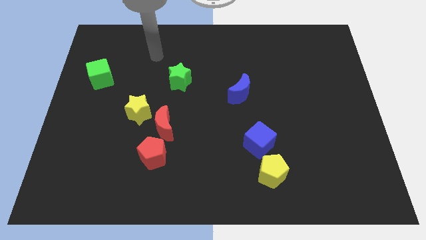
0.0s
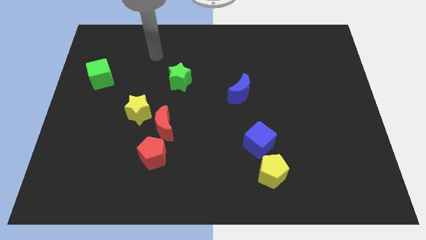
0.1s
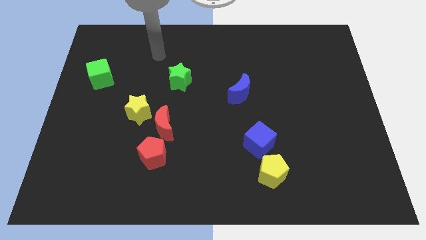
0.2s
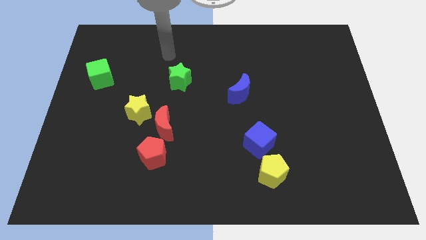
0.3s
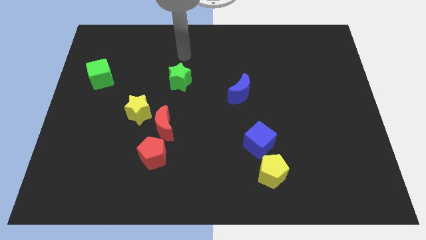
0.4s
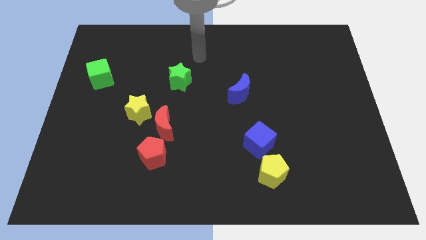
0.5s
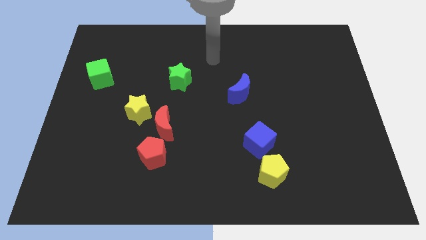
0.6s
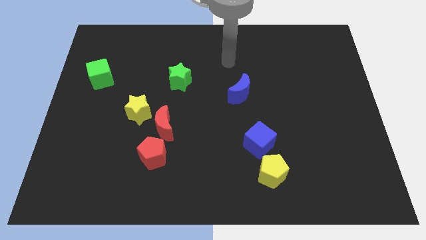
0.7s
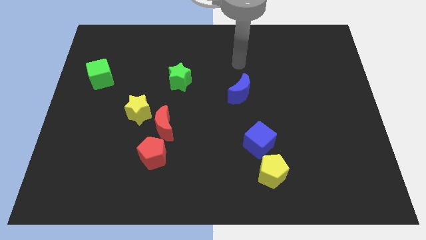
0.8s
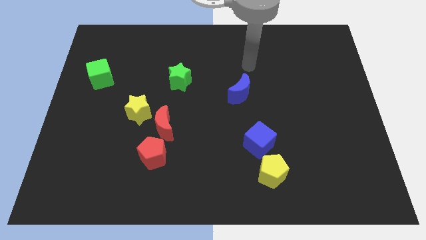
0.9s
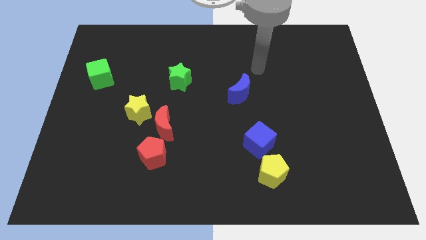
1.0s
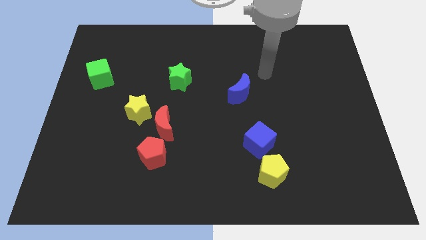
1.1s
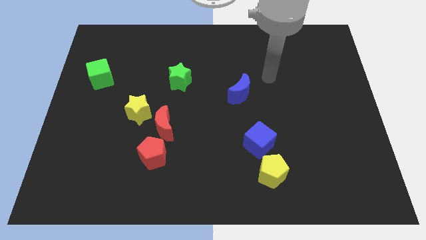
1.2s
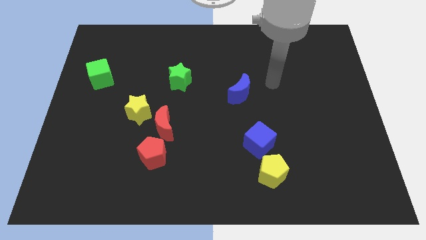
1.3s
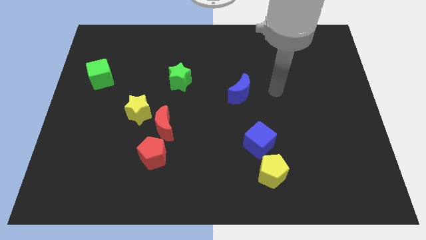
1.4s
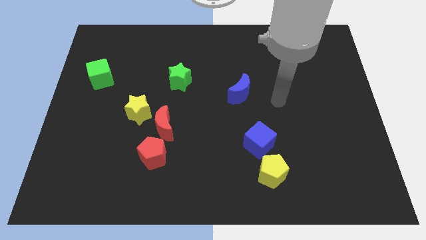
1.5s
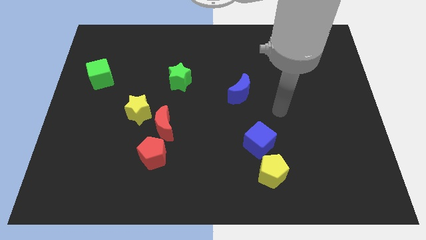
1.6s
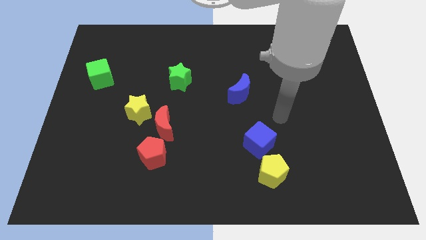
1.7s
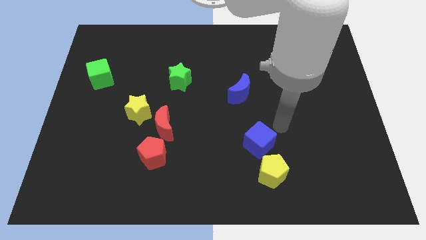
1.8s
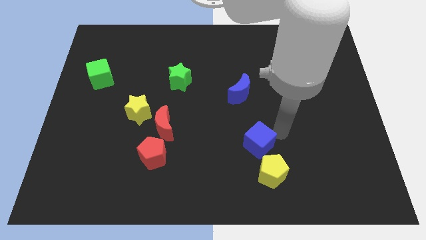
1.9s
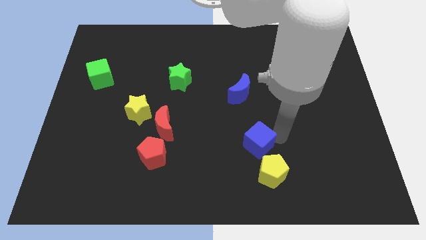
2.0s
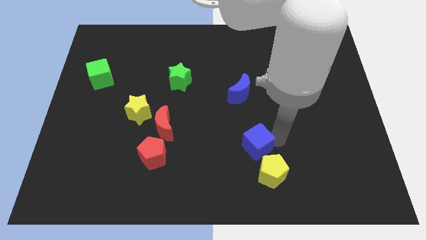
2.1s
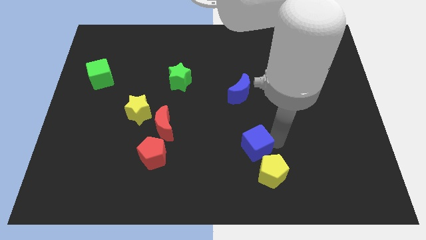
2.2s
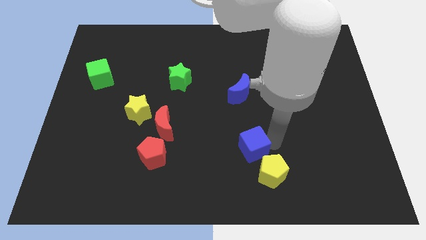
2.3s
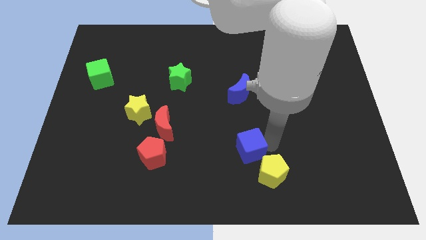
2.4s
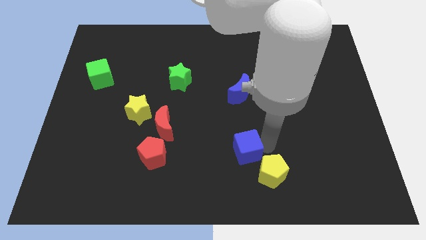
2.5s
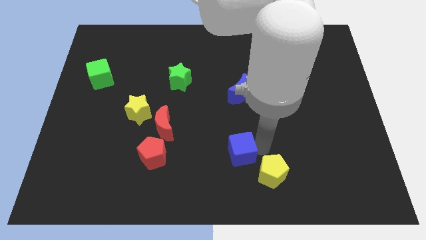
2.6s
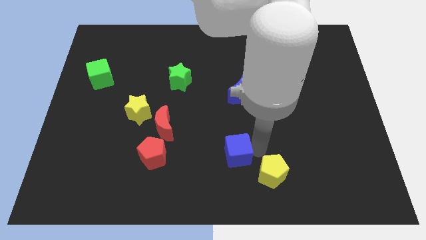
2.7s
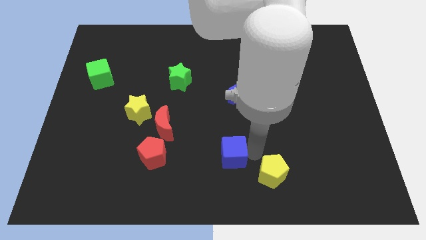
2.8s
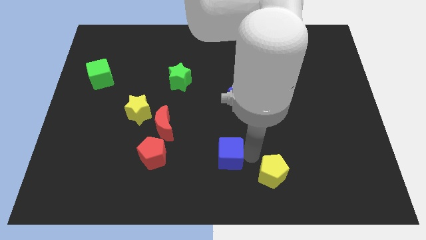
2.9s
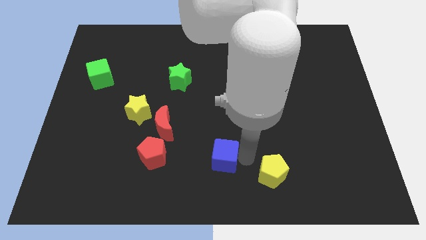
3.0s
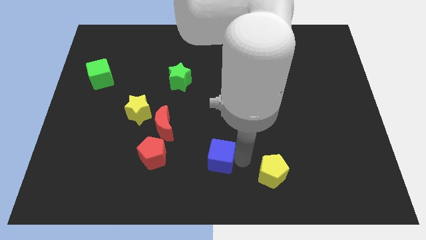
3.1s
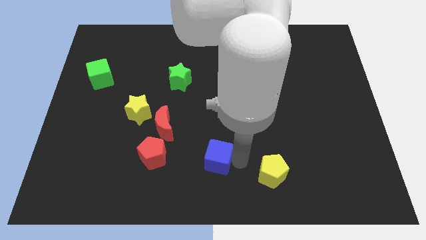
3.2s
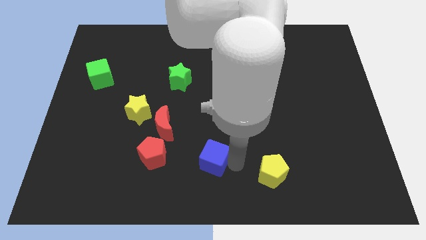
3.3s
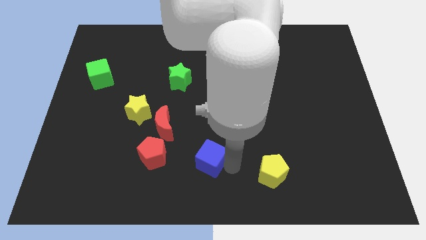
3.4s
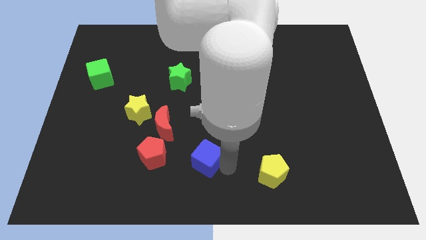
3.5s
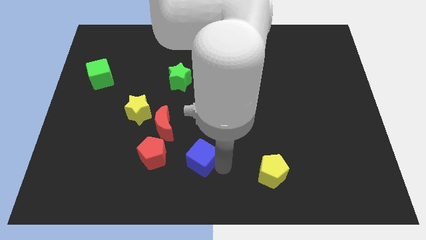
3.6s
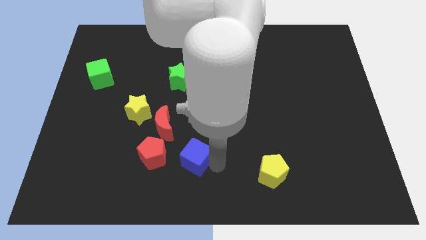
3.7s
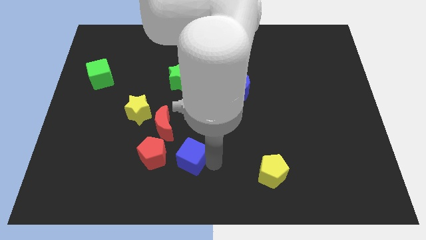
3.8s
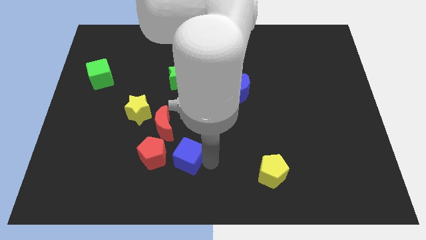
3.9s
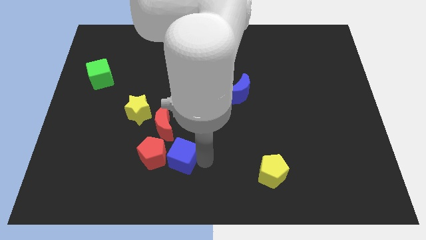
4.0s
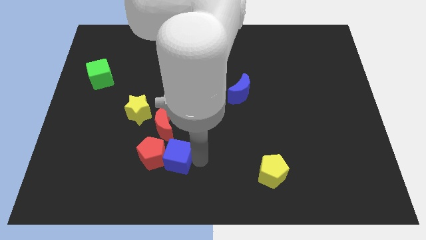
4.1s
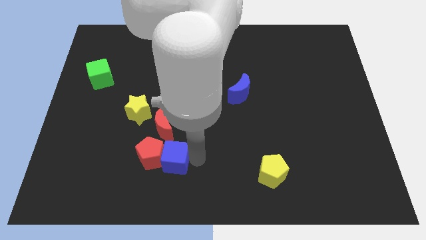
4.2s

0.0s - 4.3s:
slide the blue cube to the red pentagon

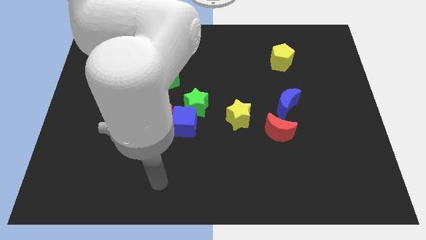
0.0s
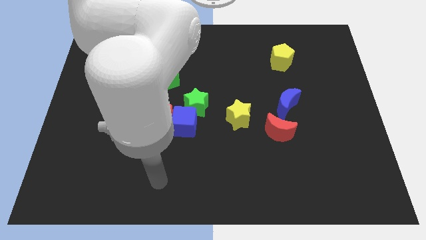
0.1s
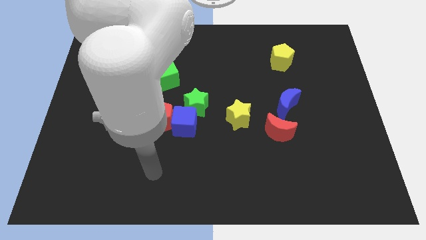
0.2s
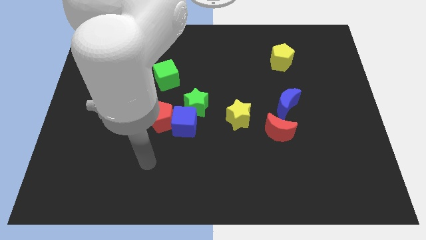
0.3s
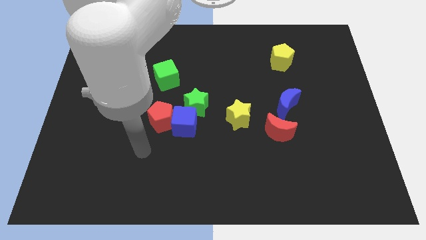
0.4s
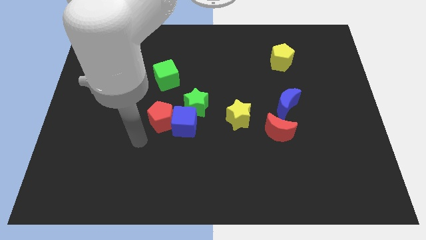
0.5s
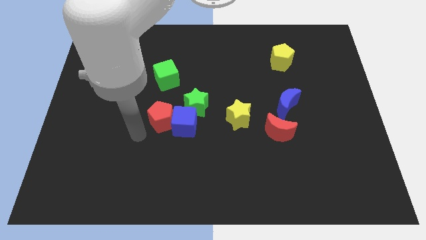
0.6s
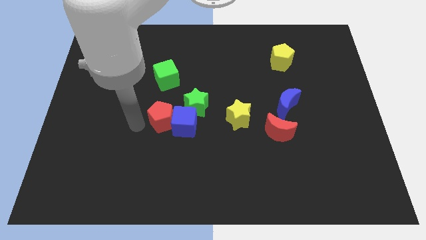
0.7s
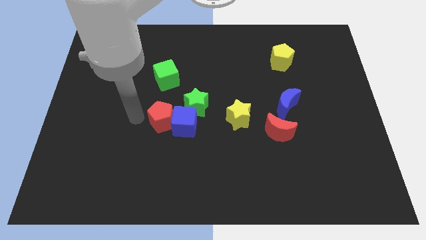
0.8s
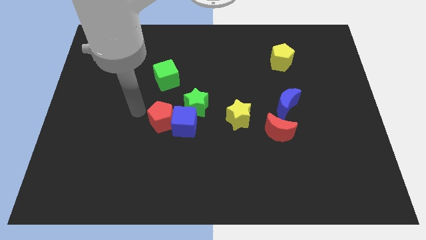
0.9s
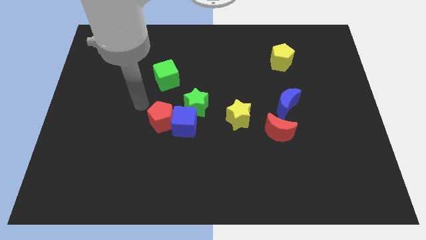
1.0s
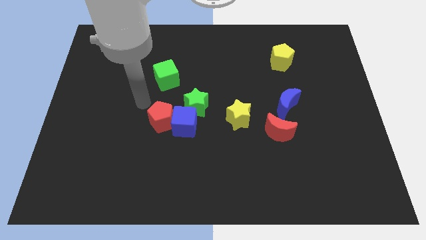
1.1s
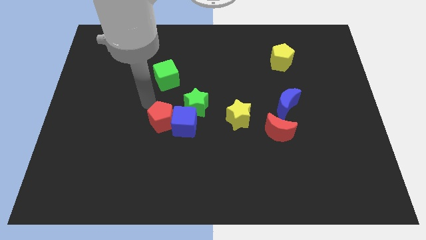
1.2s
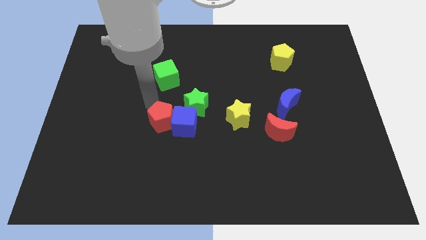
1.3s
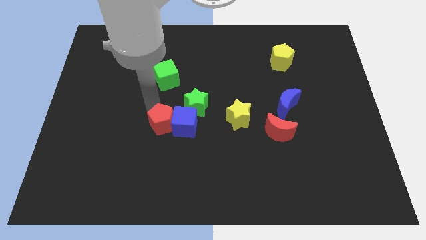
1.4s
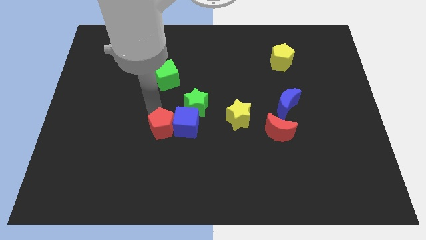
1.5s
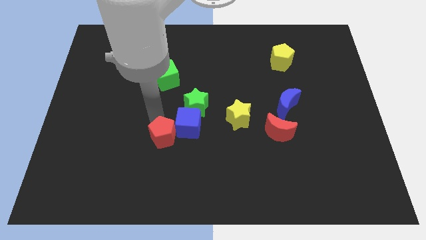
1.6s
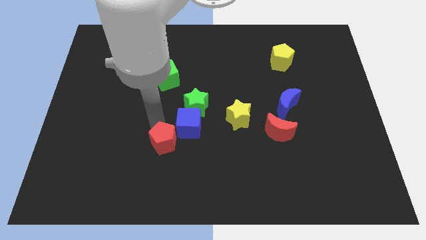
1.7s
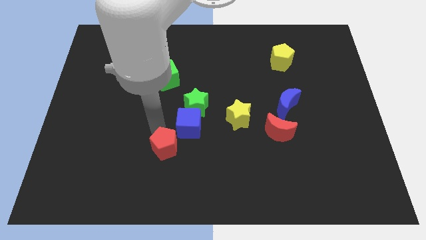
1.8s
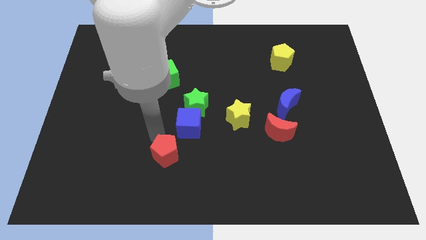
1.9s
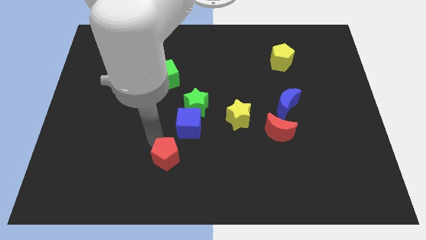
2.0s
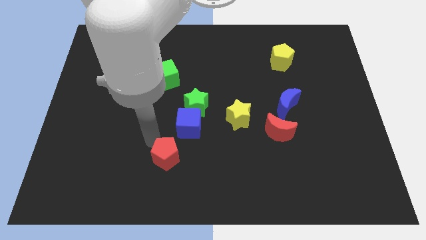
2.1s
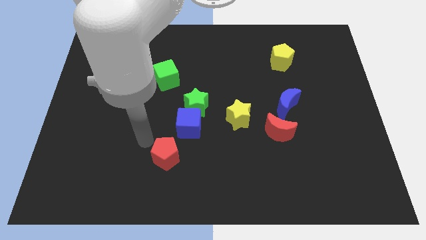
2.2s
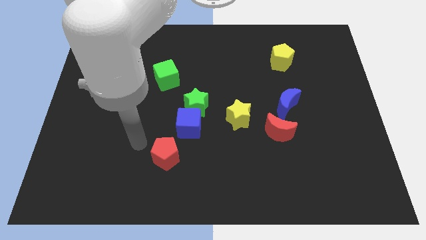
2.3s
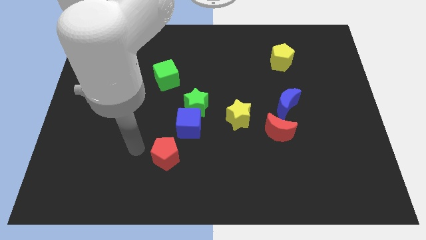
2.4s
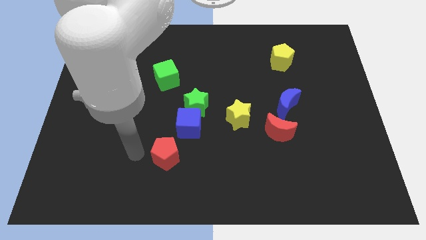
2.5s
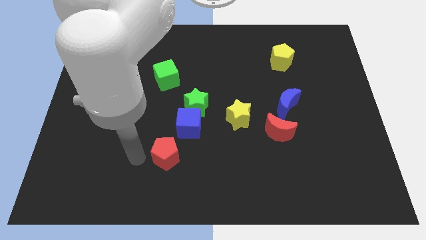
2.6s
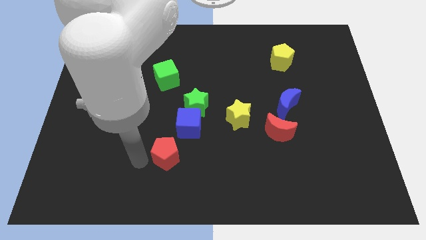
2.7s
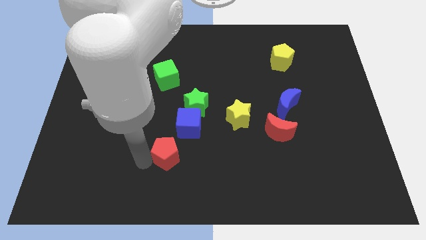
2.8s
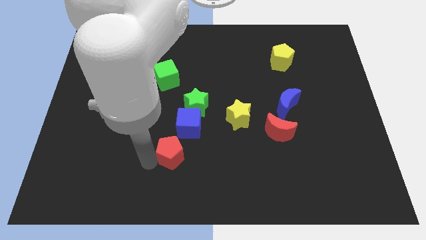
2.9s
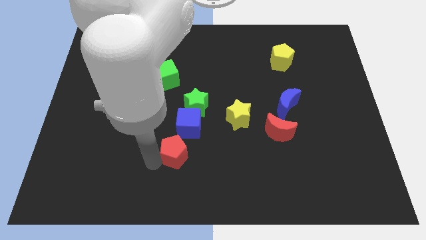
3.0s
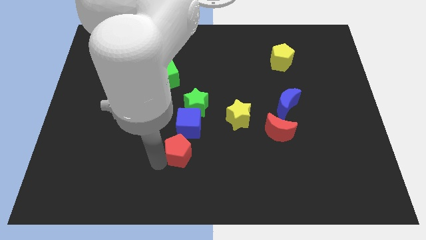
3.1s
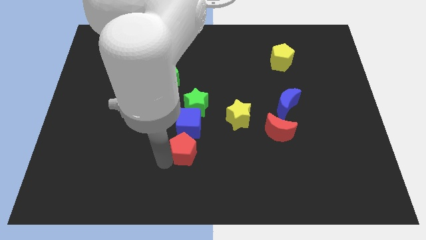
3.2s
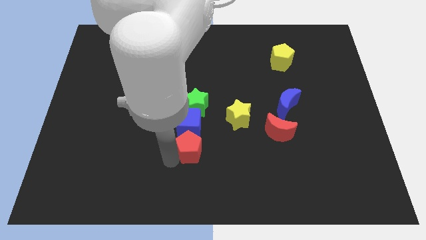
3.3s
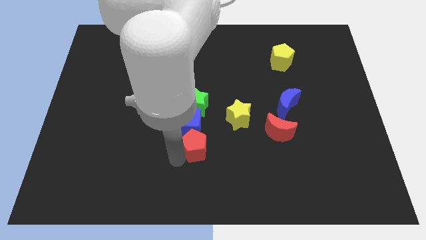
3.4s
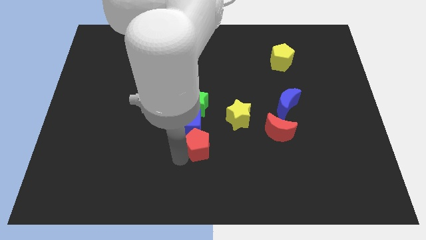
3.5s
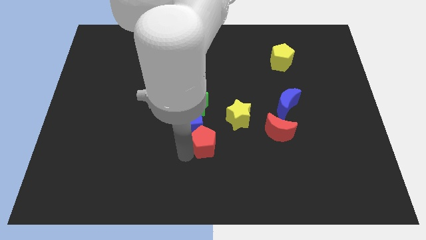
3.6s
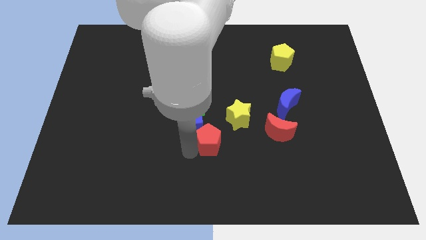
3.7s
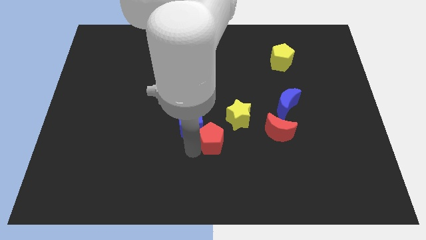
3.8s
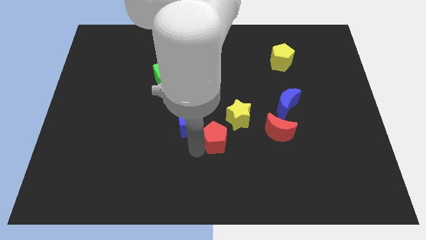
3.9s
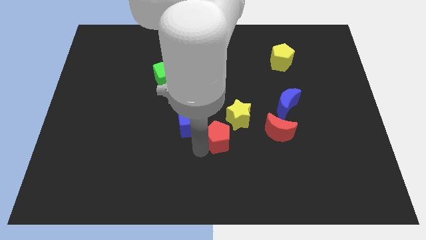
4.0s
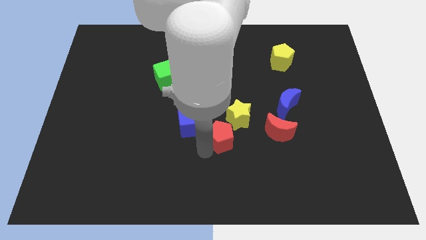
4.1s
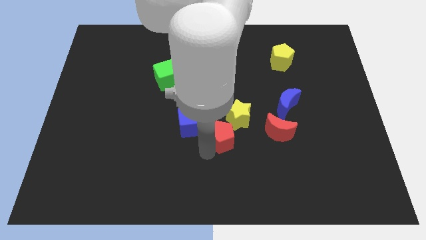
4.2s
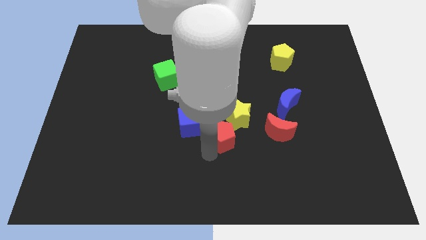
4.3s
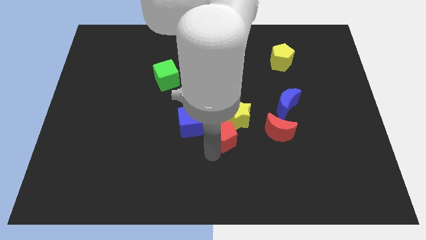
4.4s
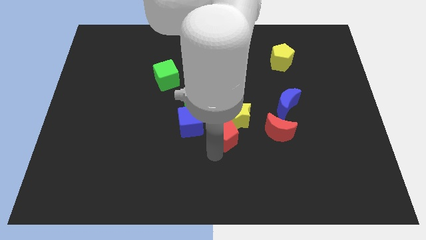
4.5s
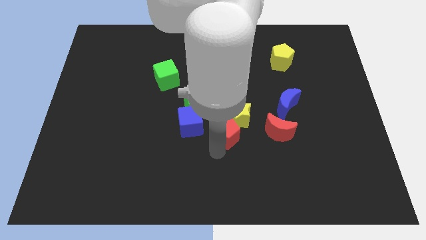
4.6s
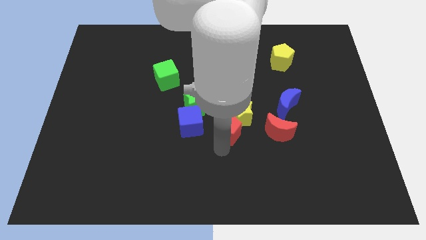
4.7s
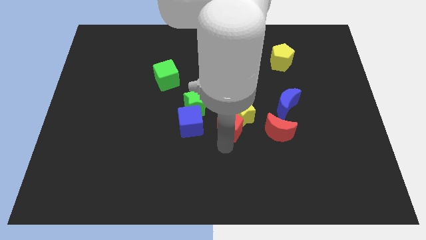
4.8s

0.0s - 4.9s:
slide the red pentagon next to the yellow star
